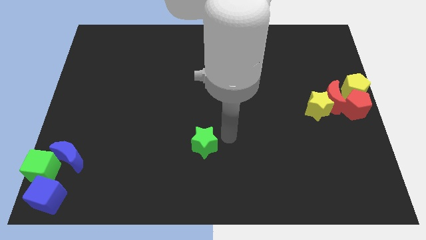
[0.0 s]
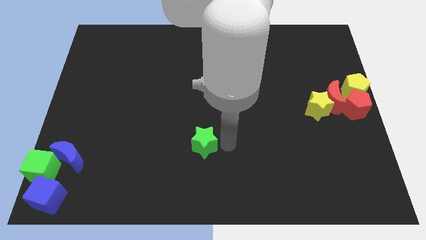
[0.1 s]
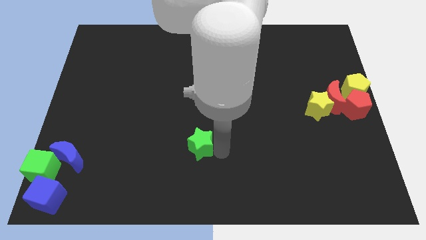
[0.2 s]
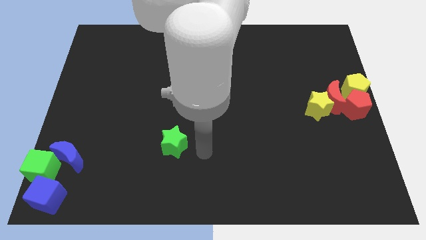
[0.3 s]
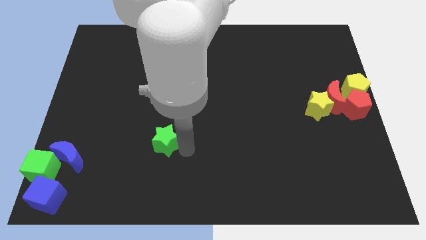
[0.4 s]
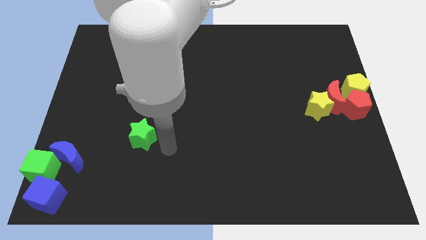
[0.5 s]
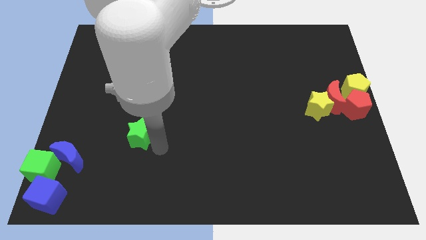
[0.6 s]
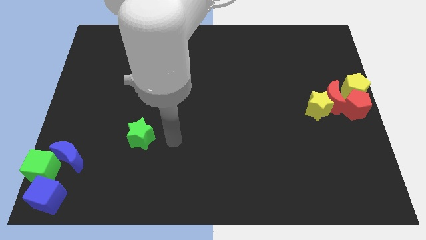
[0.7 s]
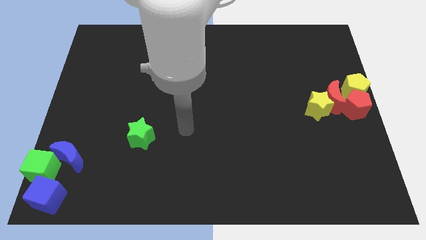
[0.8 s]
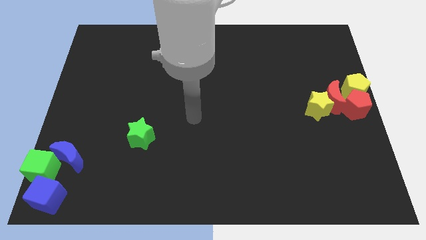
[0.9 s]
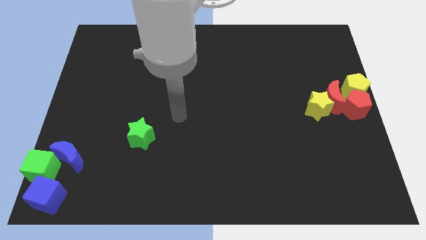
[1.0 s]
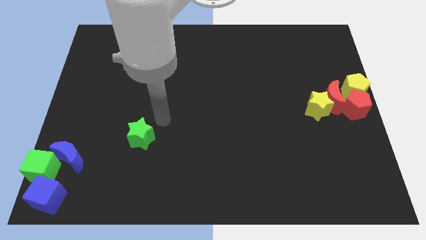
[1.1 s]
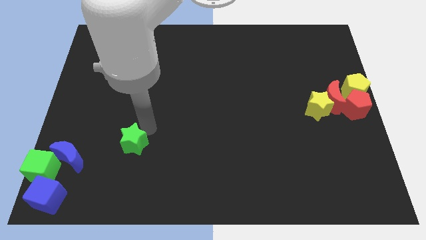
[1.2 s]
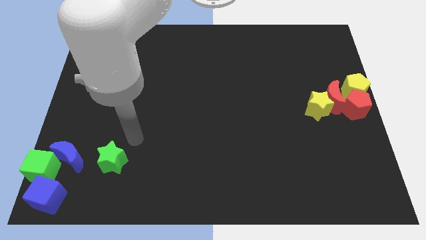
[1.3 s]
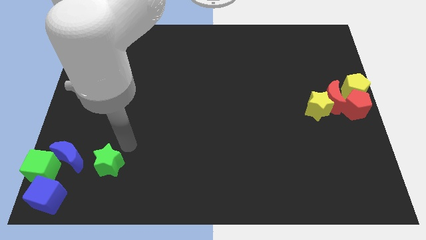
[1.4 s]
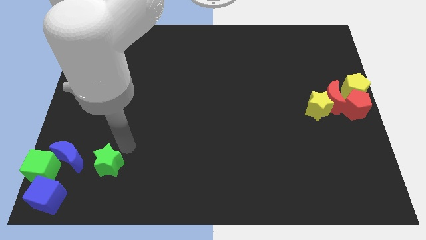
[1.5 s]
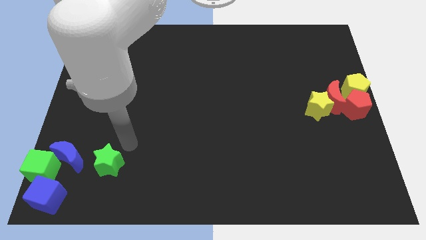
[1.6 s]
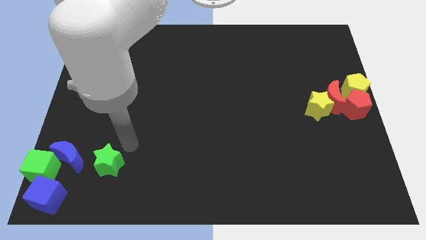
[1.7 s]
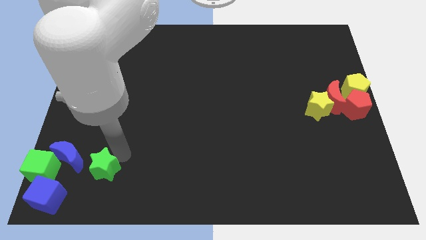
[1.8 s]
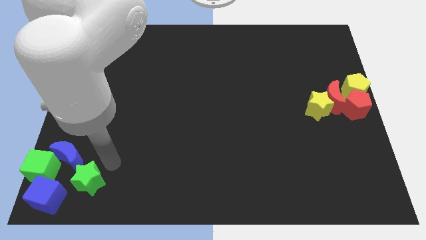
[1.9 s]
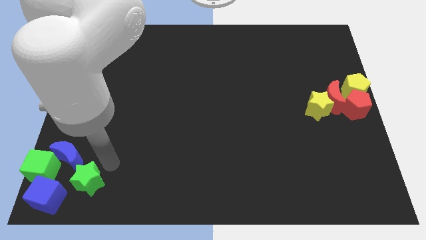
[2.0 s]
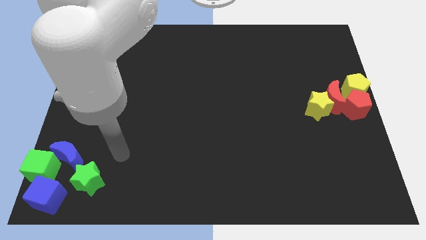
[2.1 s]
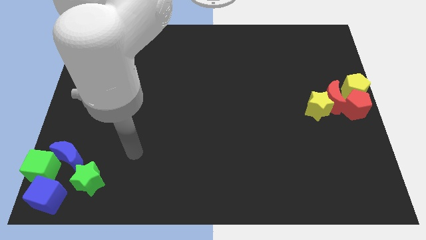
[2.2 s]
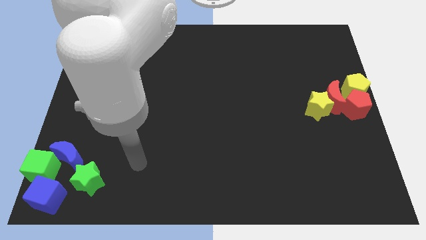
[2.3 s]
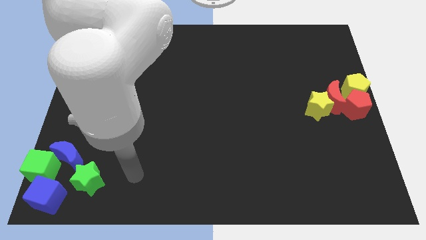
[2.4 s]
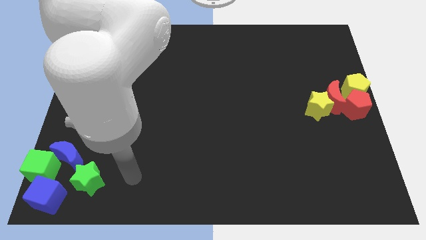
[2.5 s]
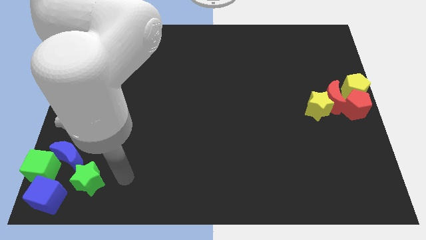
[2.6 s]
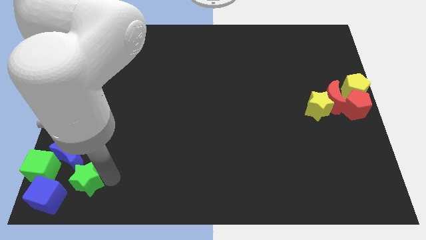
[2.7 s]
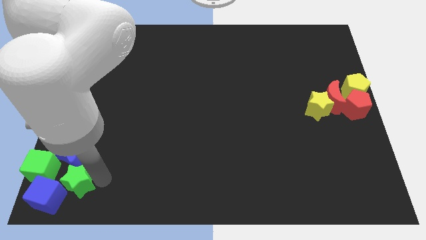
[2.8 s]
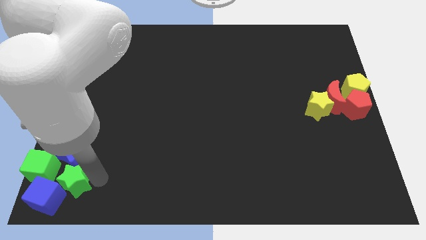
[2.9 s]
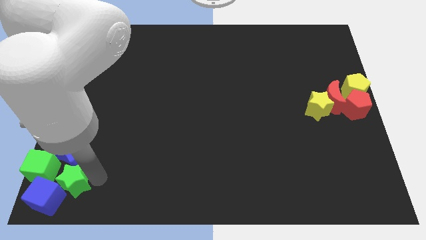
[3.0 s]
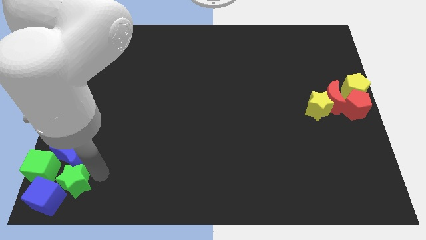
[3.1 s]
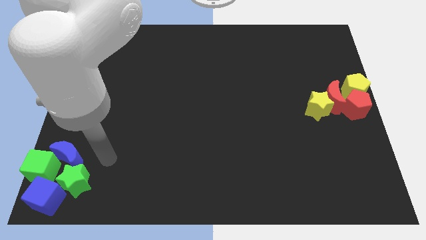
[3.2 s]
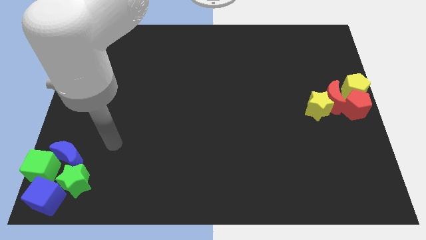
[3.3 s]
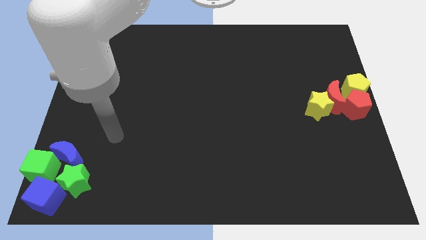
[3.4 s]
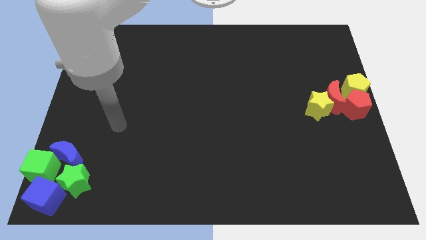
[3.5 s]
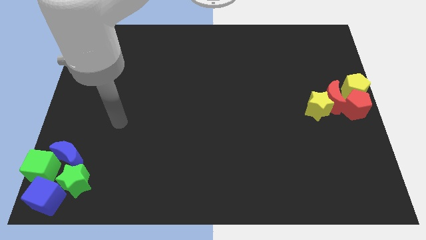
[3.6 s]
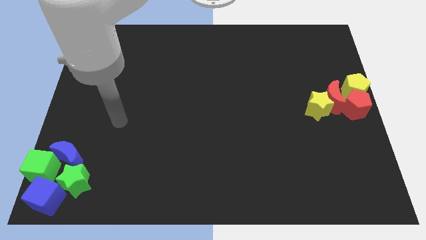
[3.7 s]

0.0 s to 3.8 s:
move the green star into the blue cube

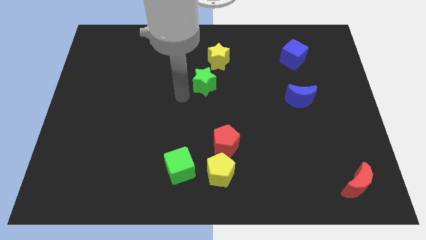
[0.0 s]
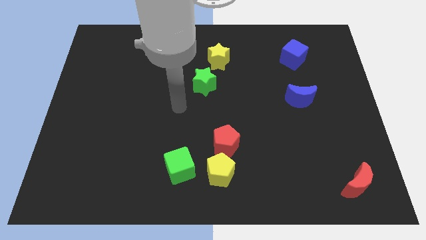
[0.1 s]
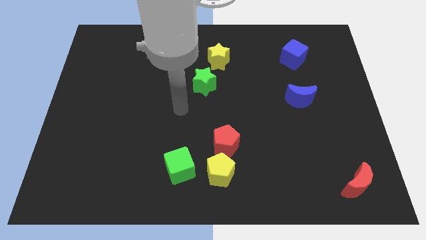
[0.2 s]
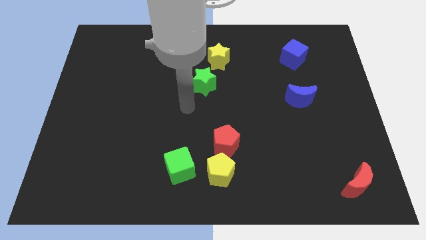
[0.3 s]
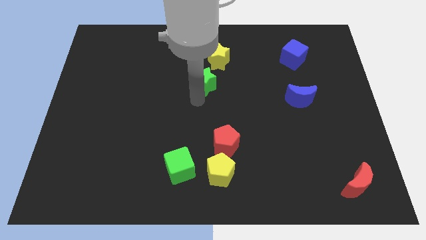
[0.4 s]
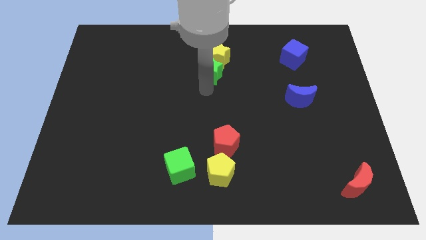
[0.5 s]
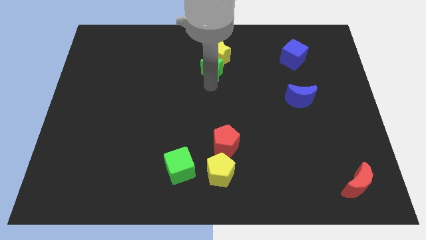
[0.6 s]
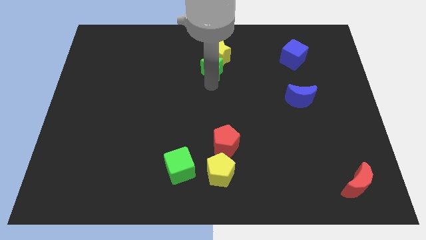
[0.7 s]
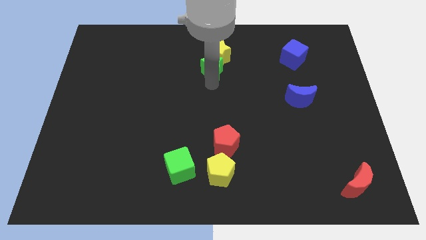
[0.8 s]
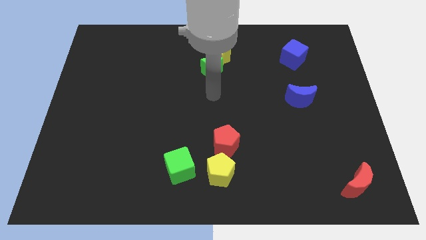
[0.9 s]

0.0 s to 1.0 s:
push the green star into the yellow star

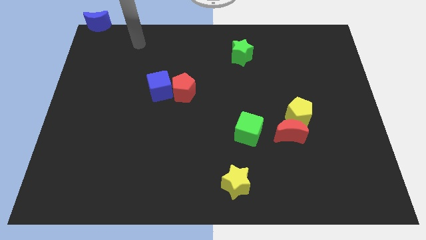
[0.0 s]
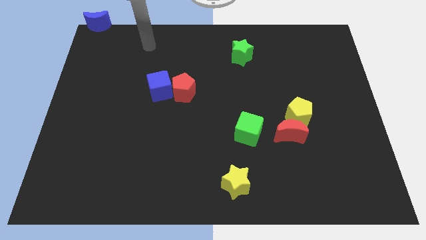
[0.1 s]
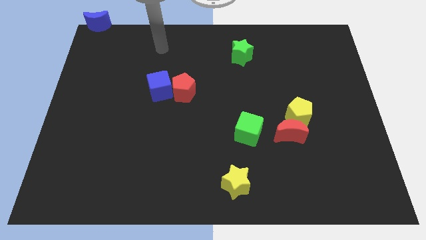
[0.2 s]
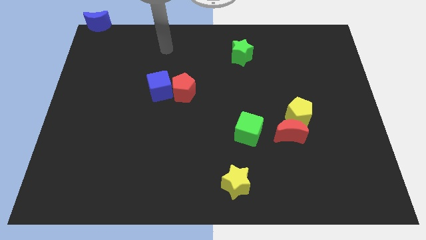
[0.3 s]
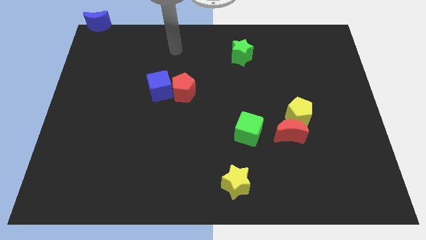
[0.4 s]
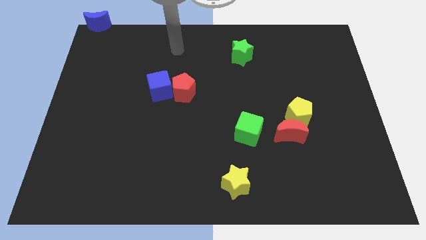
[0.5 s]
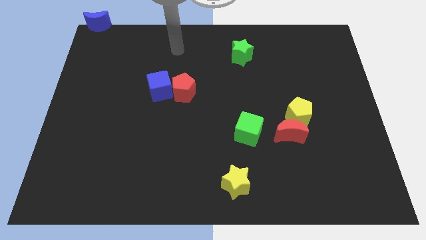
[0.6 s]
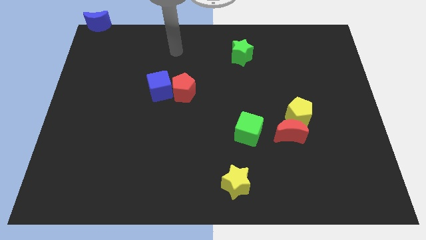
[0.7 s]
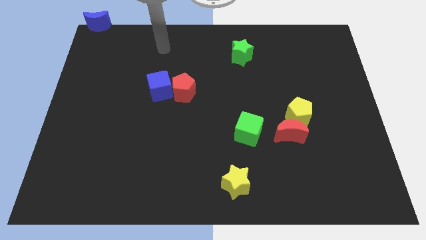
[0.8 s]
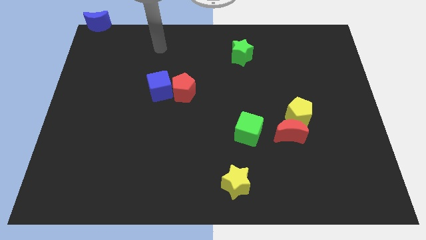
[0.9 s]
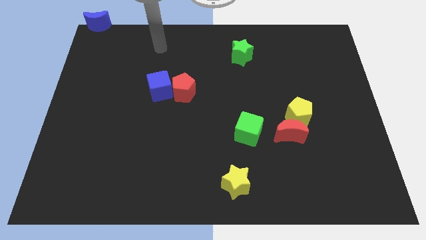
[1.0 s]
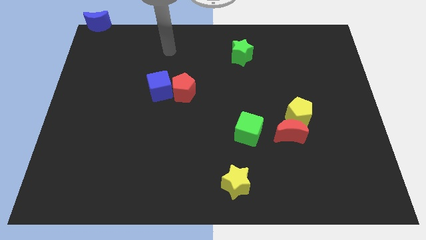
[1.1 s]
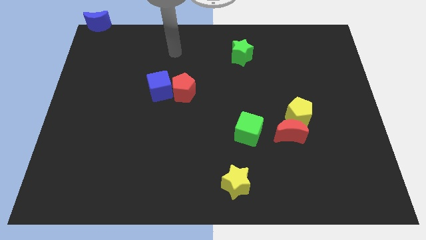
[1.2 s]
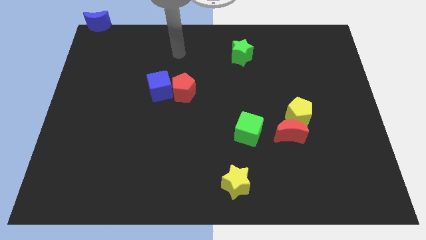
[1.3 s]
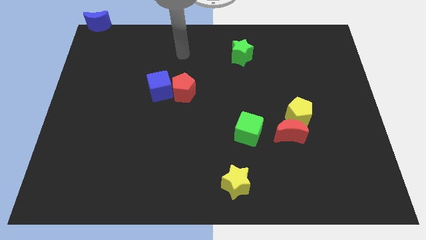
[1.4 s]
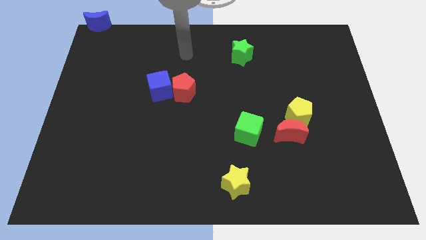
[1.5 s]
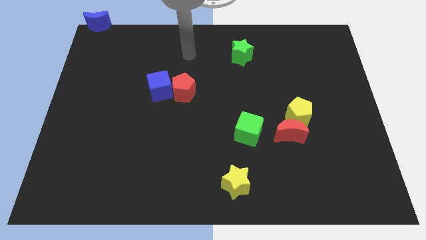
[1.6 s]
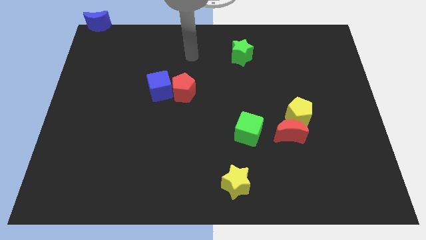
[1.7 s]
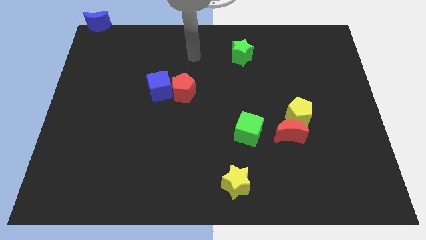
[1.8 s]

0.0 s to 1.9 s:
place your arm diagonal to the left of the green star

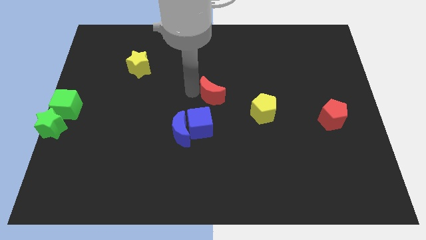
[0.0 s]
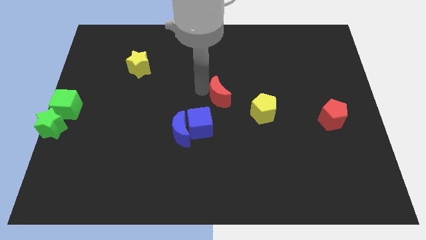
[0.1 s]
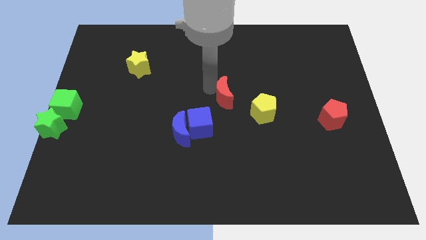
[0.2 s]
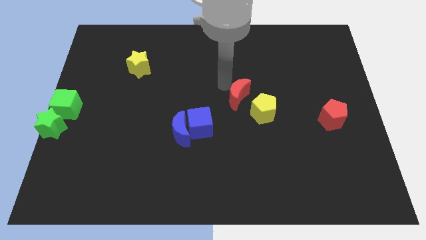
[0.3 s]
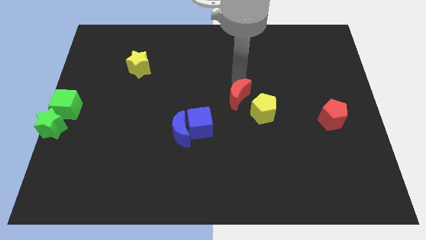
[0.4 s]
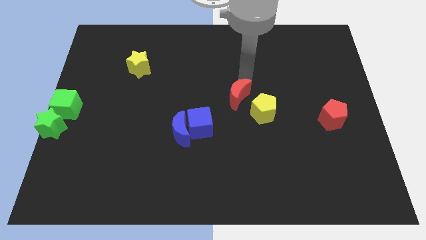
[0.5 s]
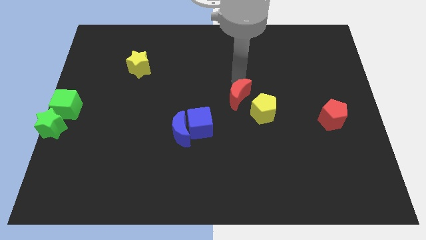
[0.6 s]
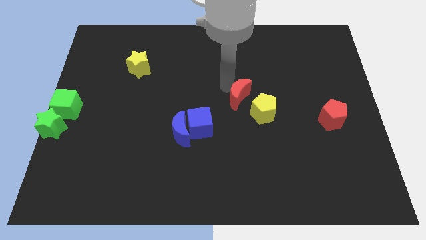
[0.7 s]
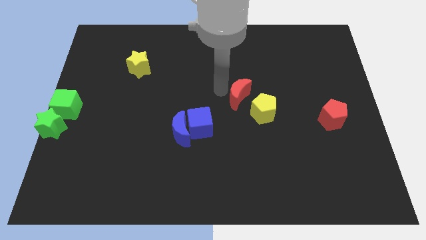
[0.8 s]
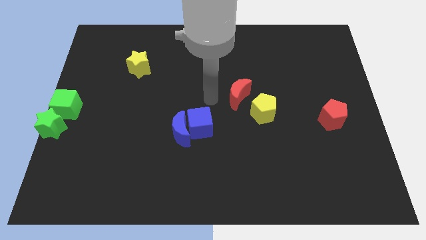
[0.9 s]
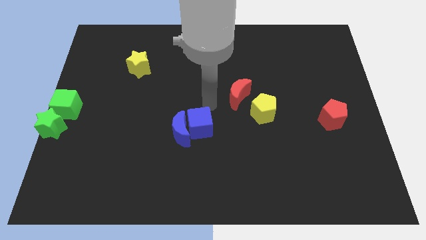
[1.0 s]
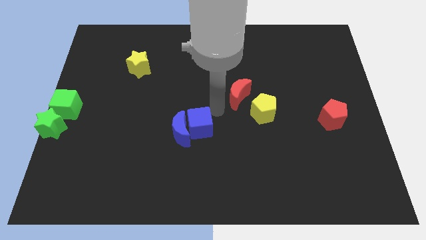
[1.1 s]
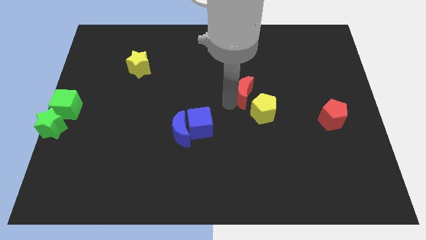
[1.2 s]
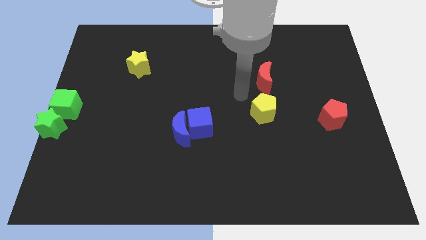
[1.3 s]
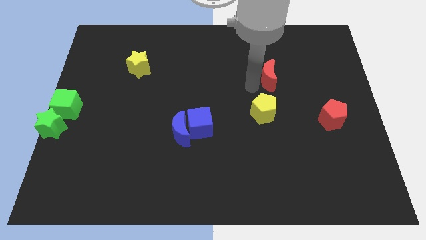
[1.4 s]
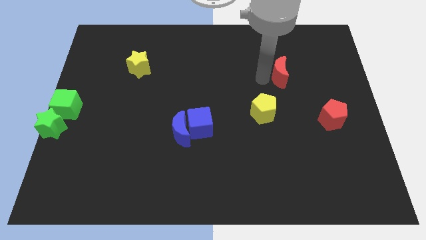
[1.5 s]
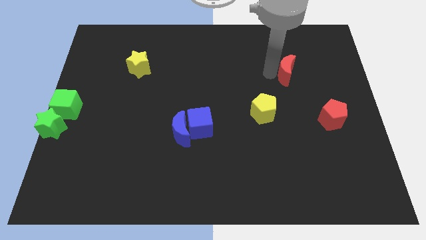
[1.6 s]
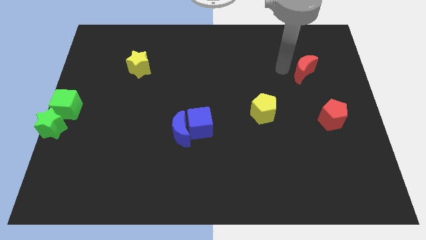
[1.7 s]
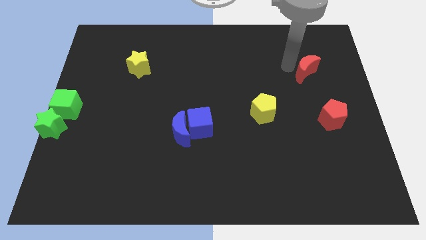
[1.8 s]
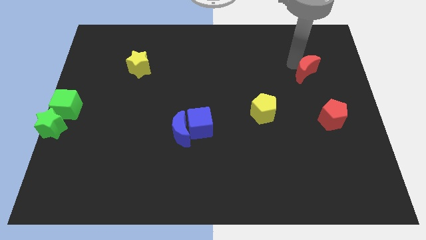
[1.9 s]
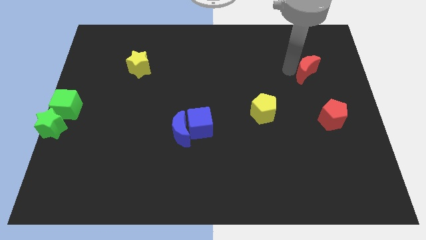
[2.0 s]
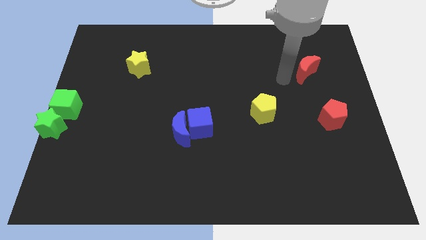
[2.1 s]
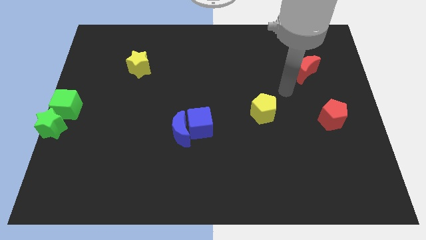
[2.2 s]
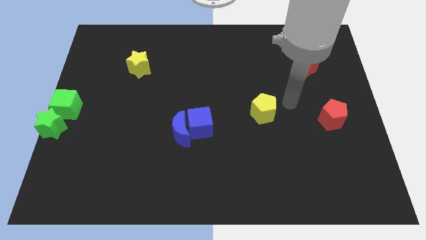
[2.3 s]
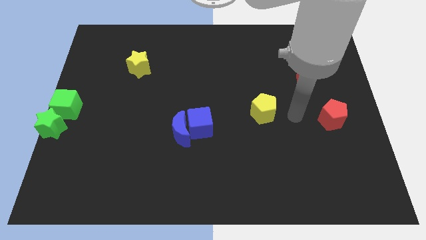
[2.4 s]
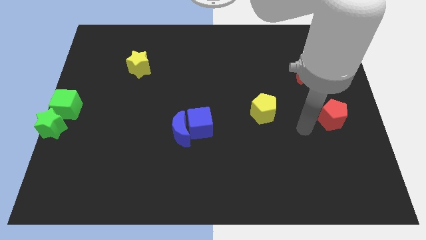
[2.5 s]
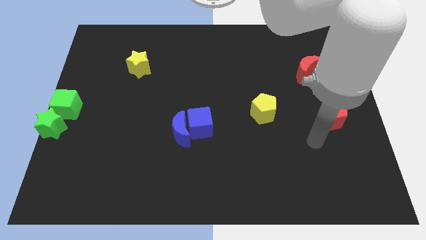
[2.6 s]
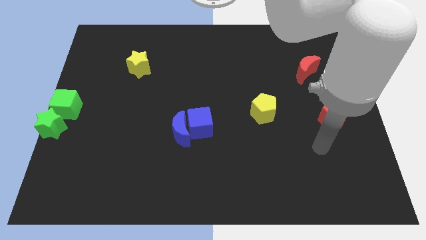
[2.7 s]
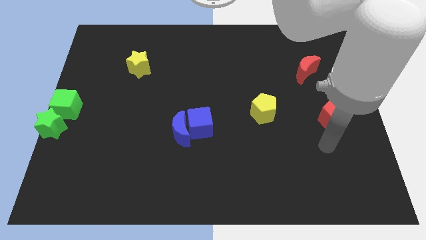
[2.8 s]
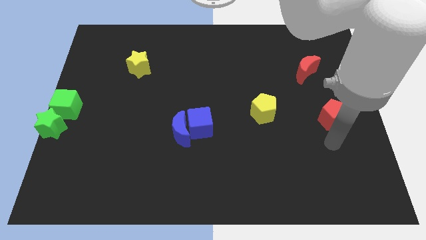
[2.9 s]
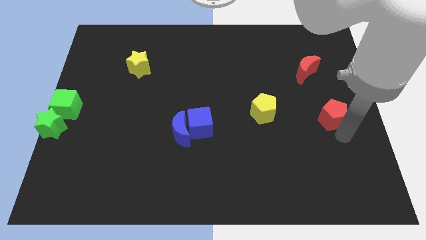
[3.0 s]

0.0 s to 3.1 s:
push the red crescent to the right
